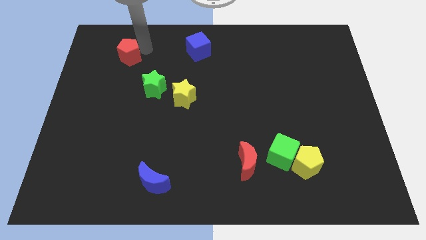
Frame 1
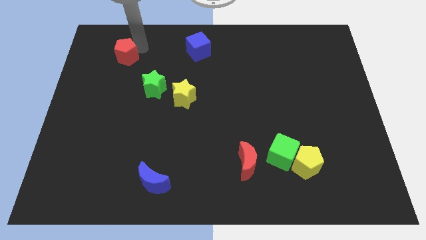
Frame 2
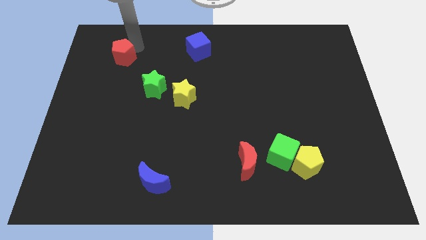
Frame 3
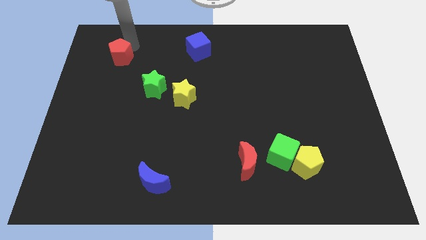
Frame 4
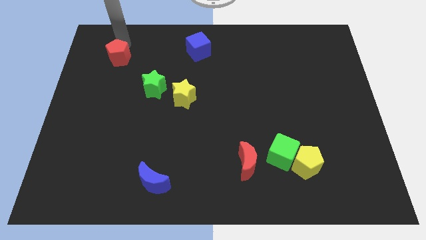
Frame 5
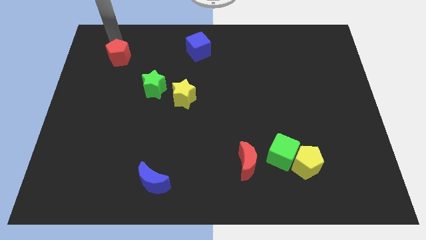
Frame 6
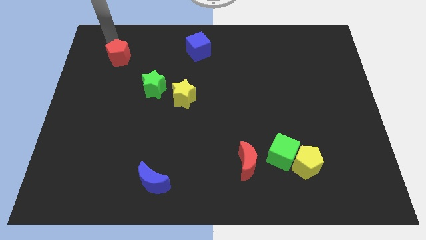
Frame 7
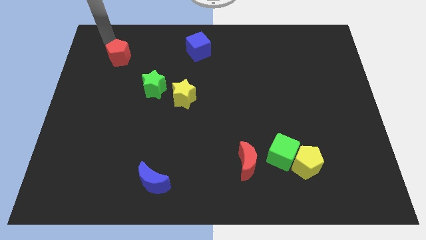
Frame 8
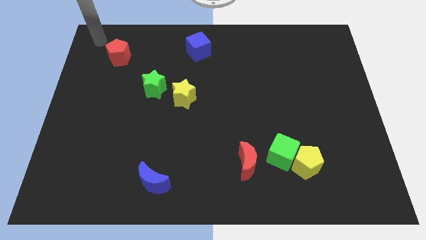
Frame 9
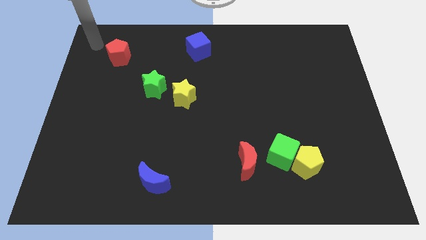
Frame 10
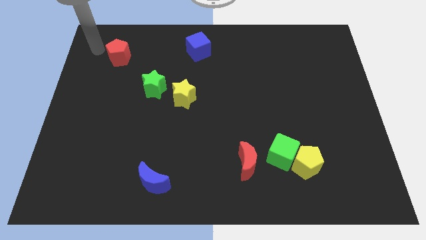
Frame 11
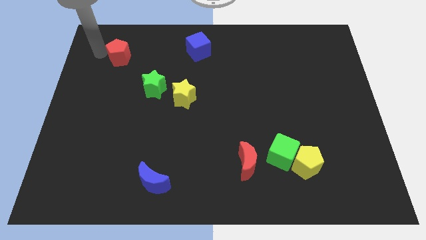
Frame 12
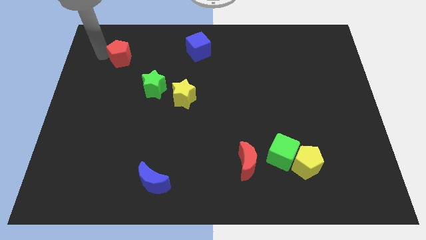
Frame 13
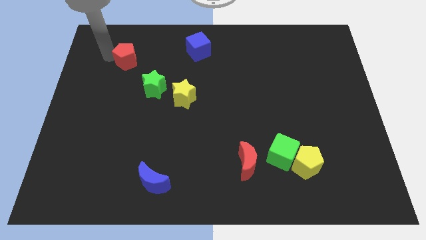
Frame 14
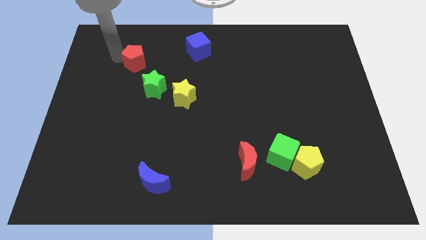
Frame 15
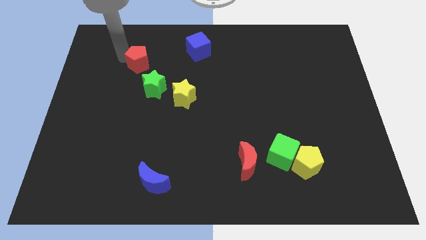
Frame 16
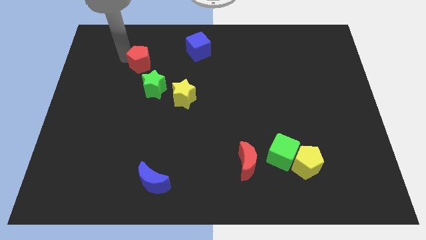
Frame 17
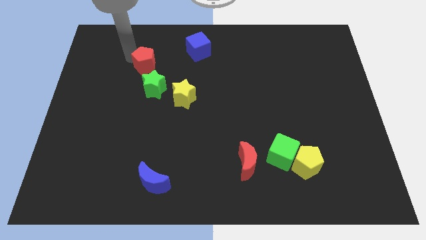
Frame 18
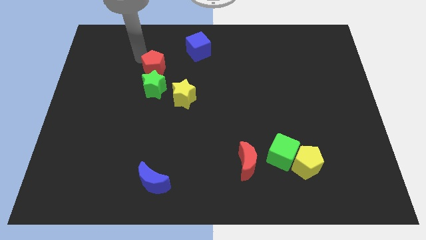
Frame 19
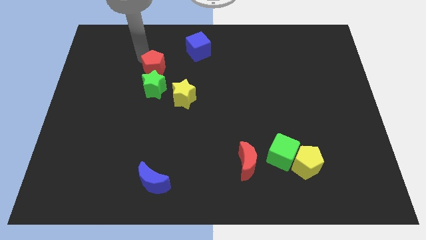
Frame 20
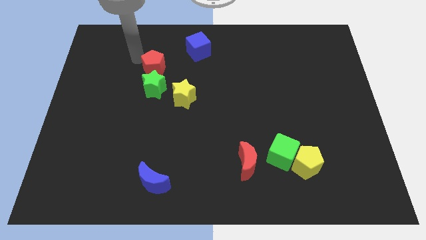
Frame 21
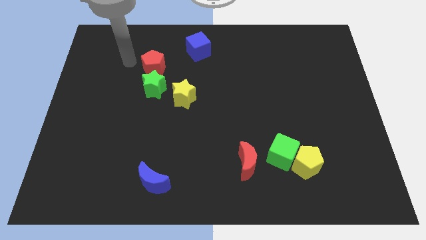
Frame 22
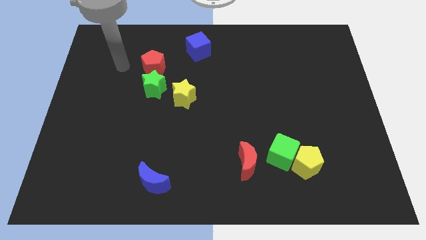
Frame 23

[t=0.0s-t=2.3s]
push the red pentagon above the green star

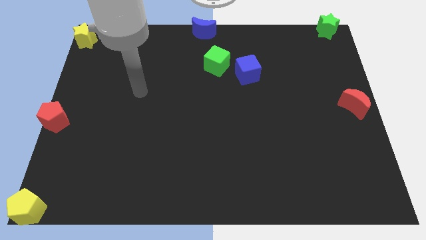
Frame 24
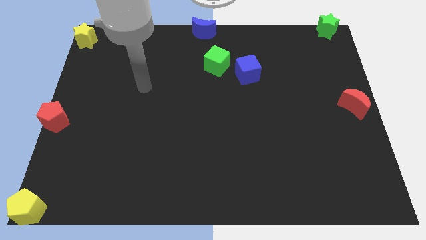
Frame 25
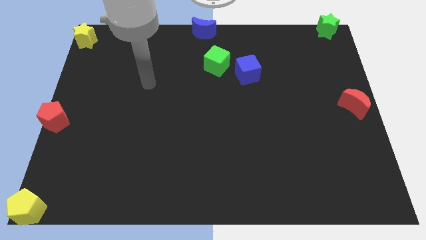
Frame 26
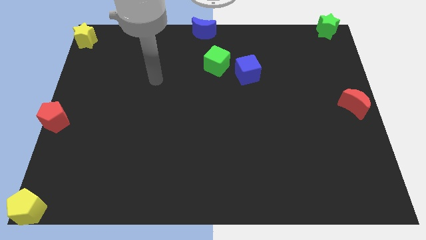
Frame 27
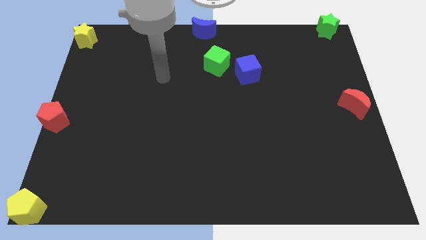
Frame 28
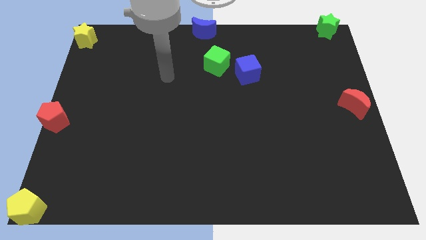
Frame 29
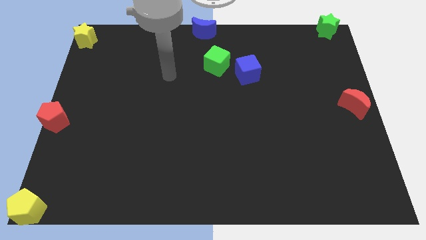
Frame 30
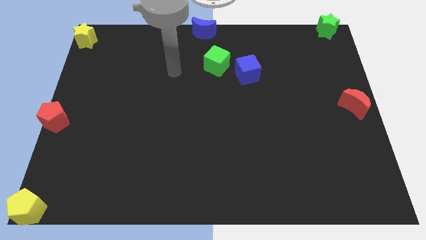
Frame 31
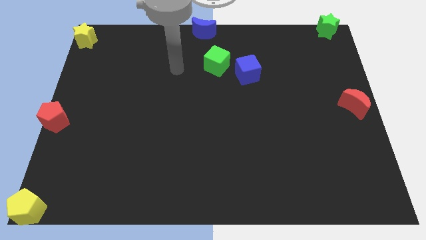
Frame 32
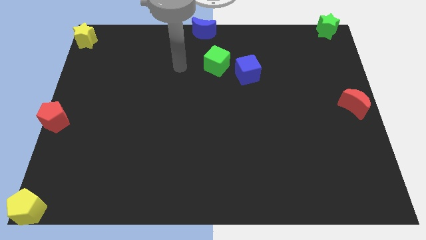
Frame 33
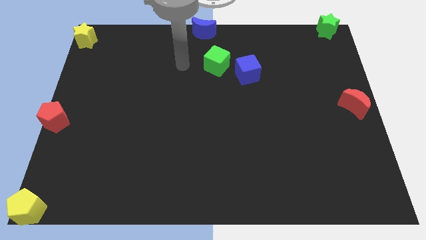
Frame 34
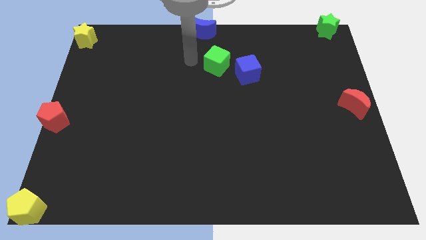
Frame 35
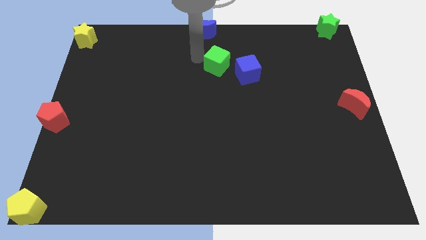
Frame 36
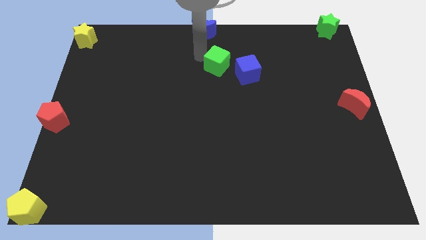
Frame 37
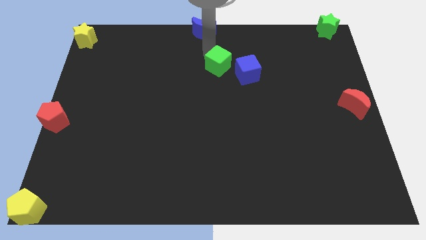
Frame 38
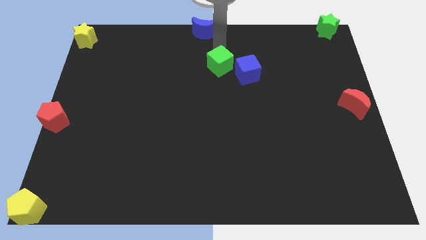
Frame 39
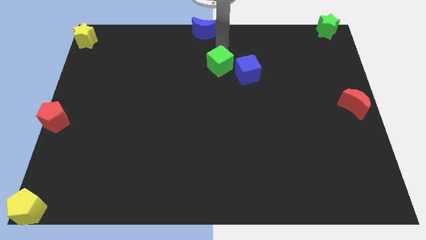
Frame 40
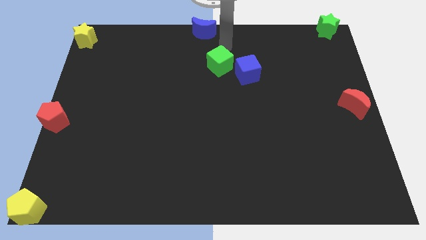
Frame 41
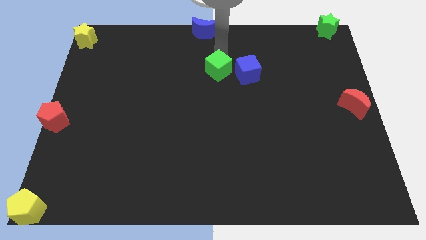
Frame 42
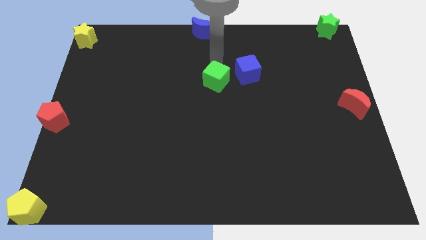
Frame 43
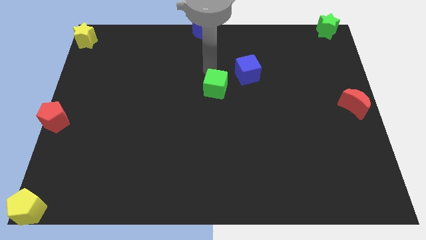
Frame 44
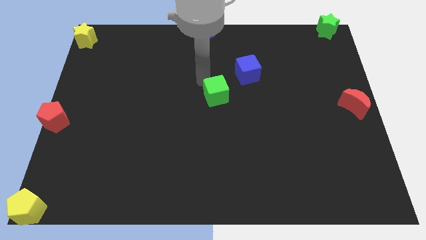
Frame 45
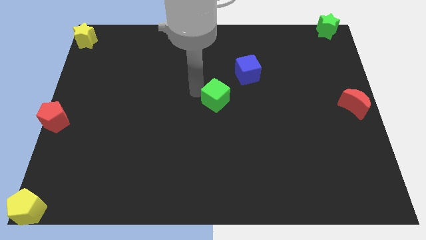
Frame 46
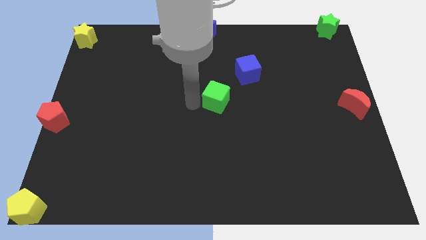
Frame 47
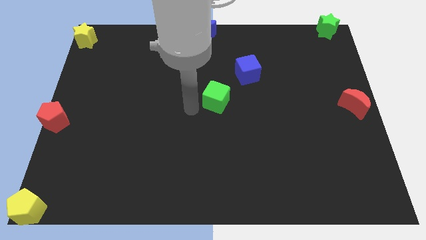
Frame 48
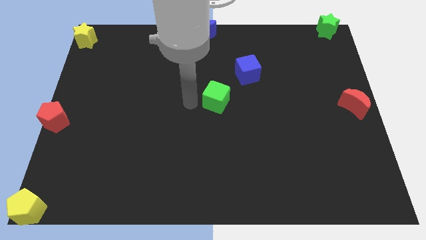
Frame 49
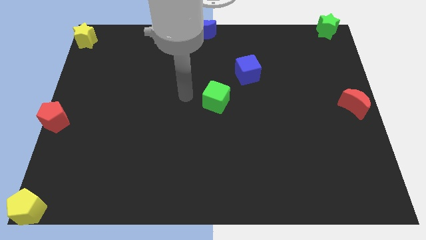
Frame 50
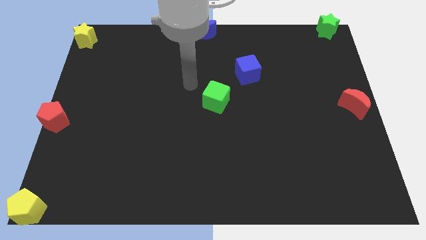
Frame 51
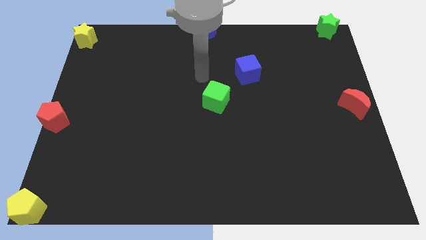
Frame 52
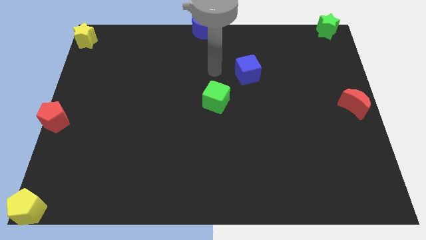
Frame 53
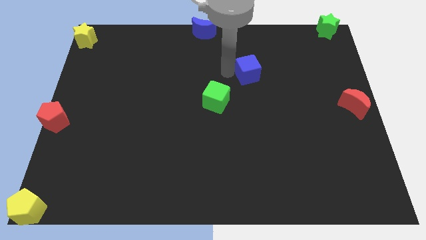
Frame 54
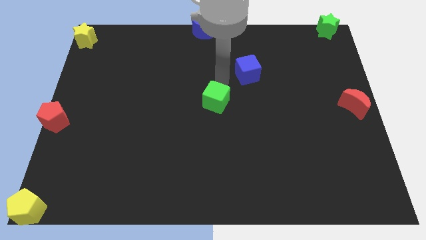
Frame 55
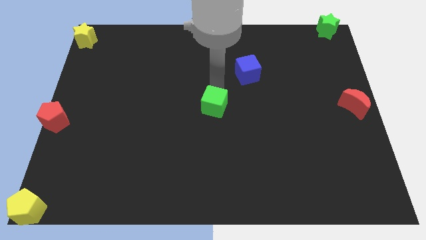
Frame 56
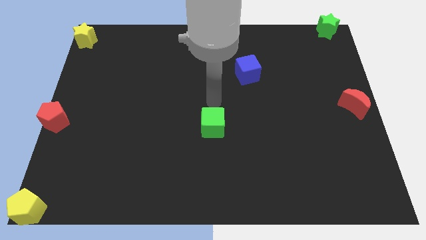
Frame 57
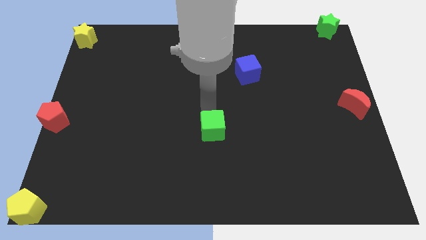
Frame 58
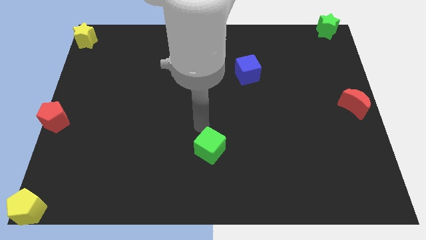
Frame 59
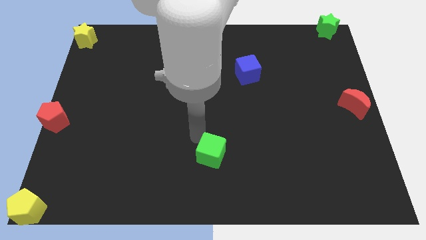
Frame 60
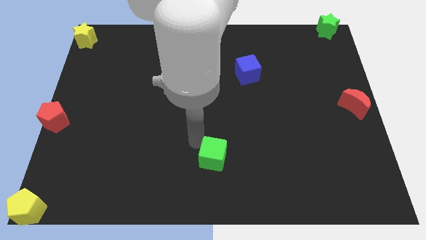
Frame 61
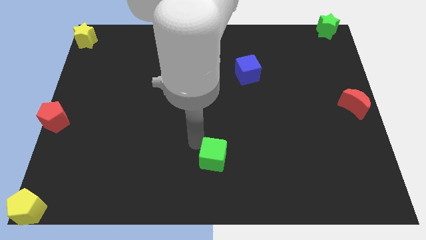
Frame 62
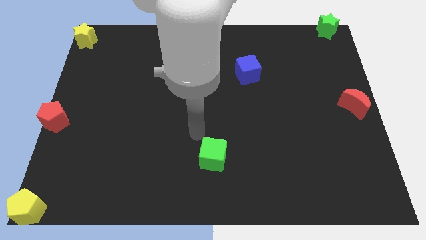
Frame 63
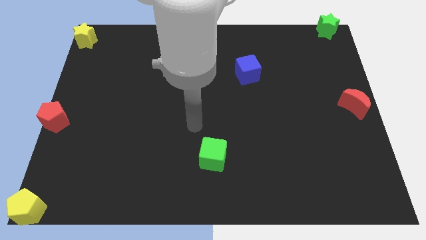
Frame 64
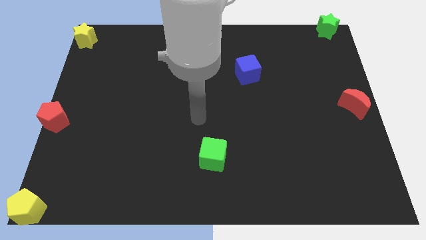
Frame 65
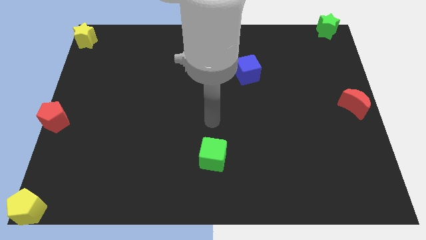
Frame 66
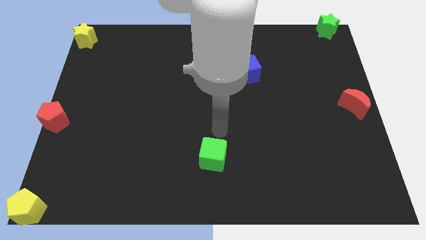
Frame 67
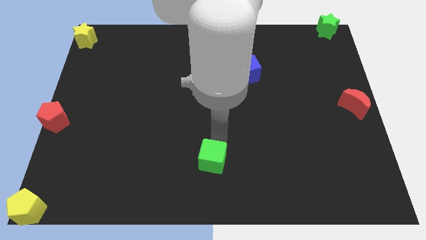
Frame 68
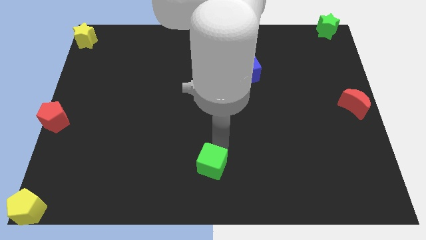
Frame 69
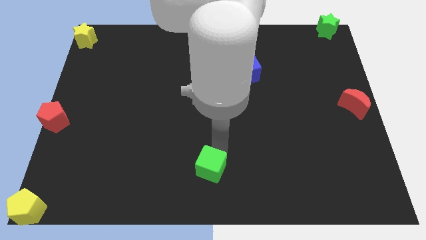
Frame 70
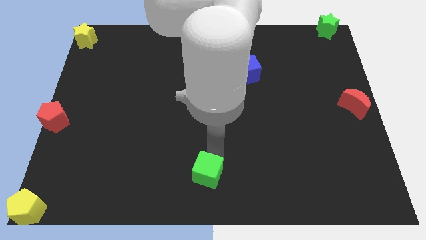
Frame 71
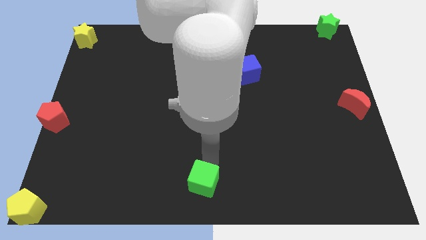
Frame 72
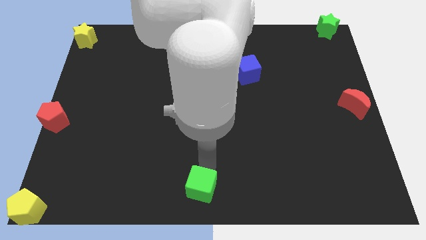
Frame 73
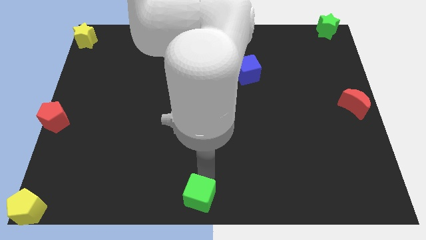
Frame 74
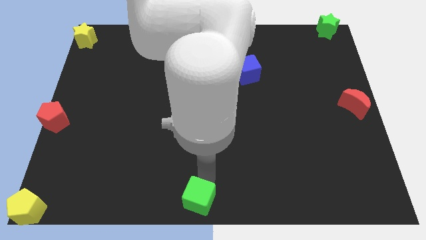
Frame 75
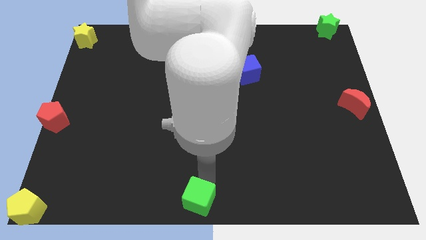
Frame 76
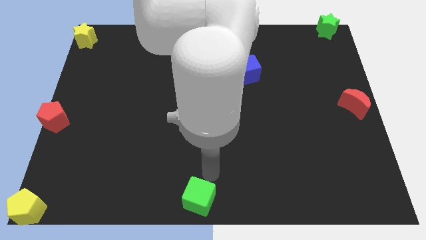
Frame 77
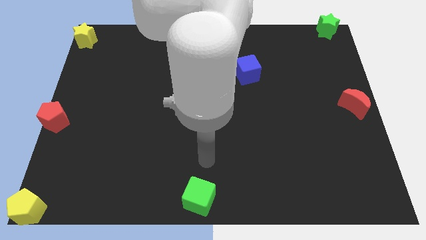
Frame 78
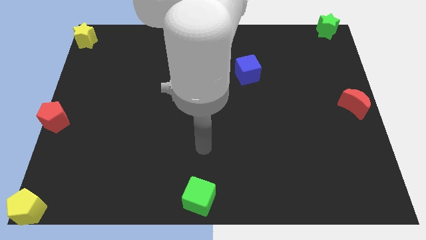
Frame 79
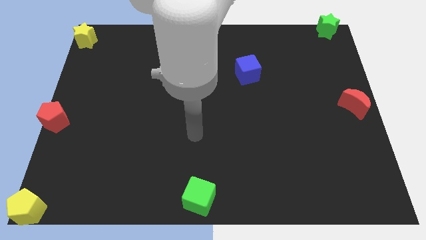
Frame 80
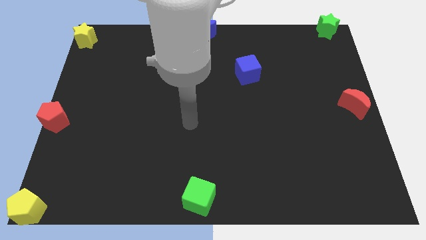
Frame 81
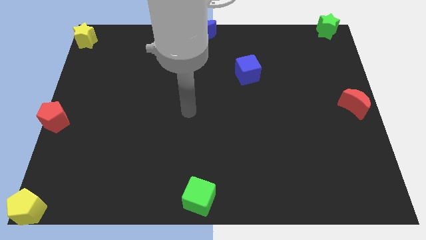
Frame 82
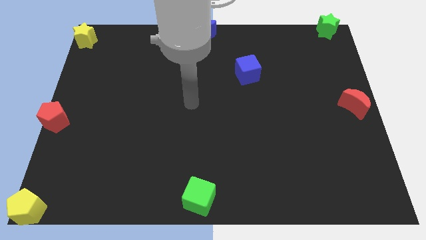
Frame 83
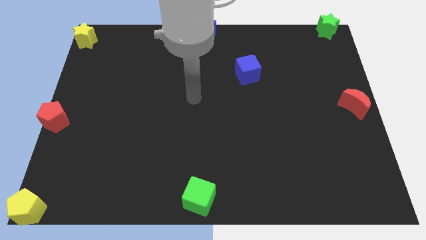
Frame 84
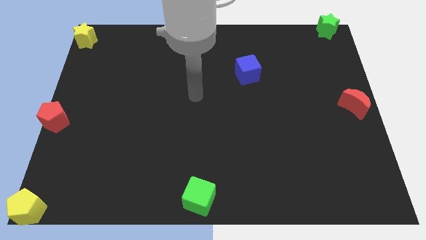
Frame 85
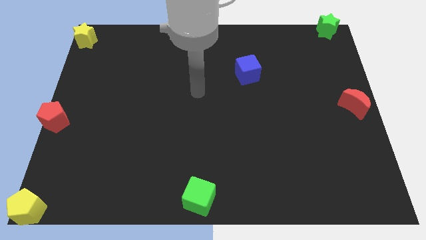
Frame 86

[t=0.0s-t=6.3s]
place the green cube to bottom center side of the board

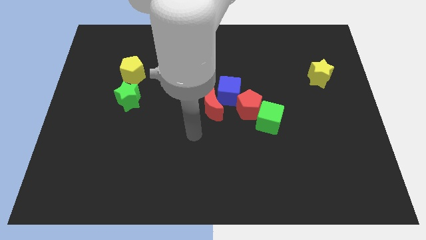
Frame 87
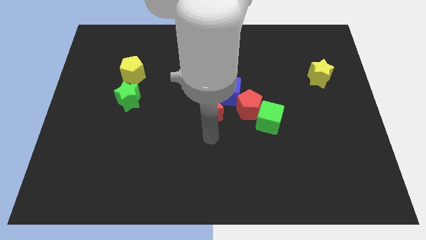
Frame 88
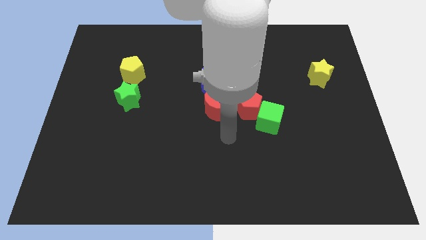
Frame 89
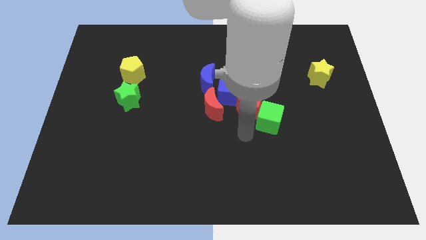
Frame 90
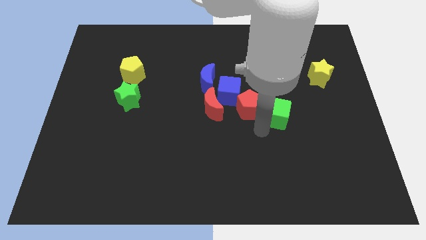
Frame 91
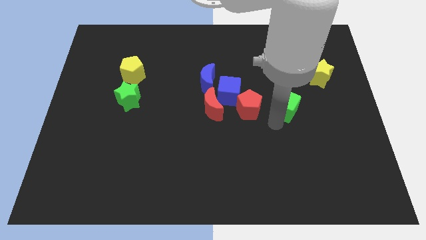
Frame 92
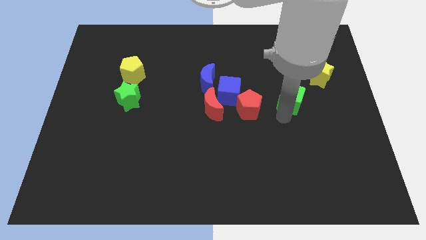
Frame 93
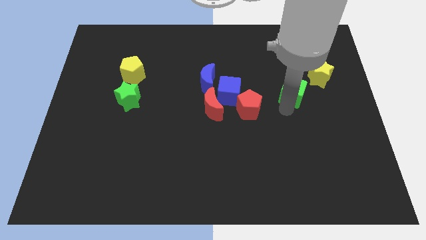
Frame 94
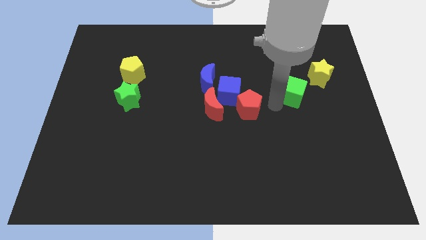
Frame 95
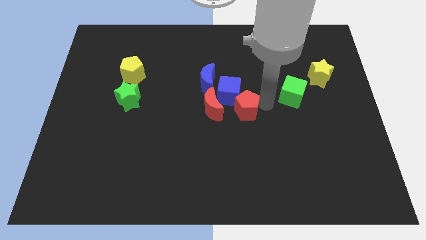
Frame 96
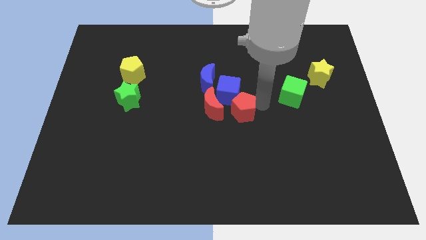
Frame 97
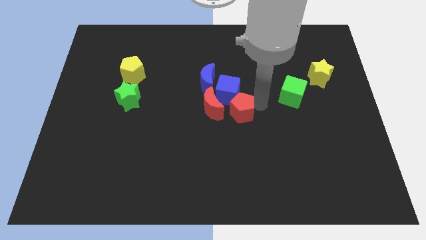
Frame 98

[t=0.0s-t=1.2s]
push the green cube towards the yellow star
